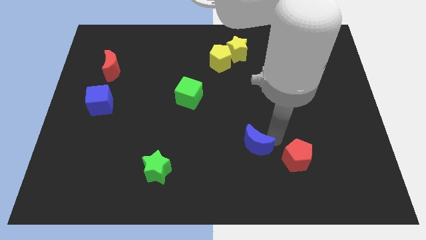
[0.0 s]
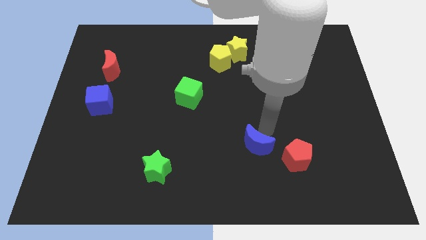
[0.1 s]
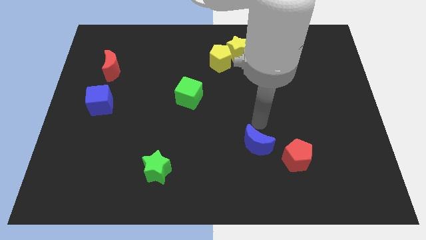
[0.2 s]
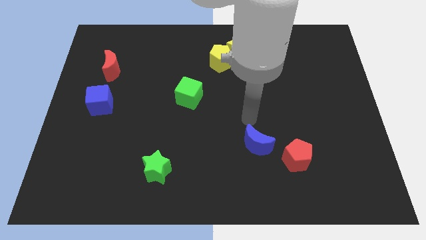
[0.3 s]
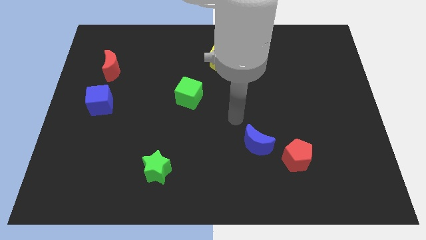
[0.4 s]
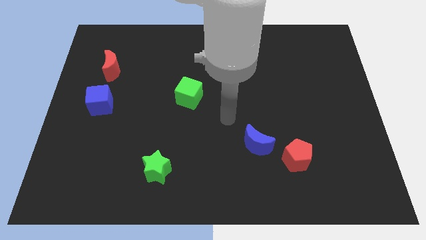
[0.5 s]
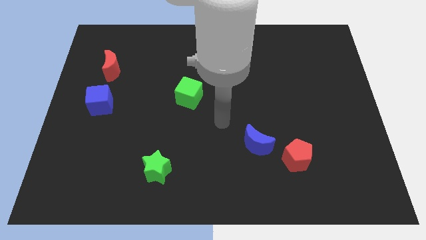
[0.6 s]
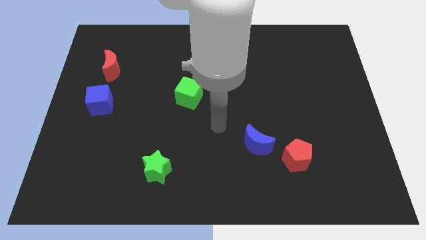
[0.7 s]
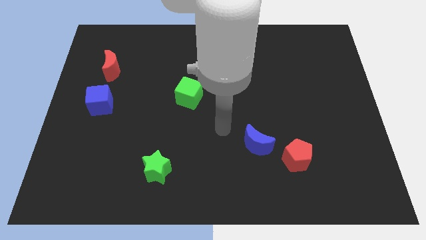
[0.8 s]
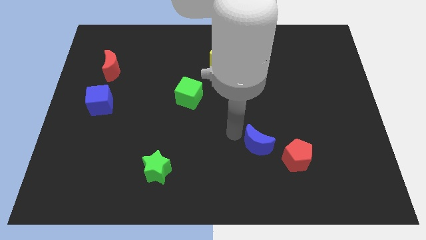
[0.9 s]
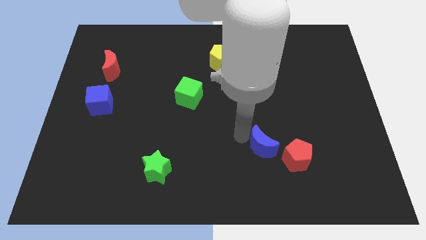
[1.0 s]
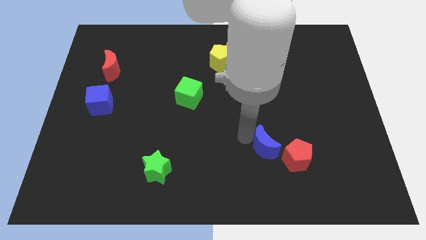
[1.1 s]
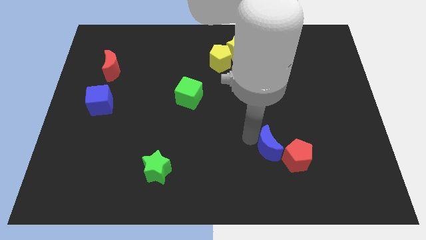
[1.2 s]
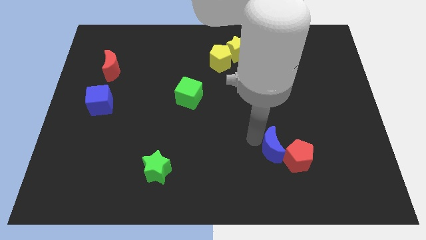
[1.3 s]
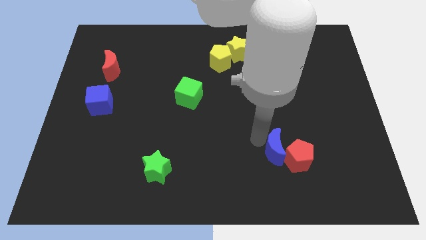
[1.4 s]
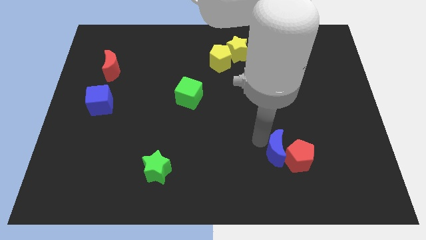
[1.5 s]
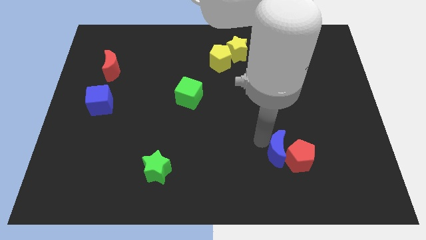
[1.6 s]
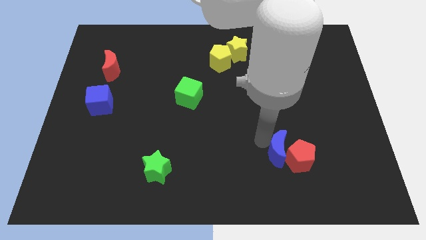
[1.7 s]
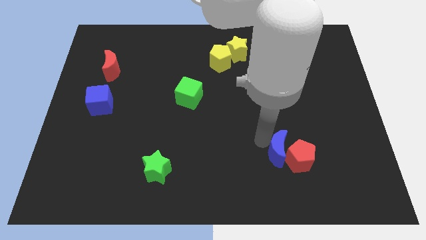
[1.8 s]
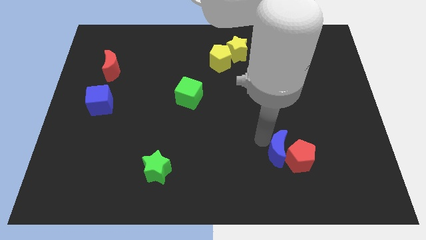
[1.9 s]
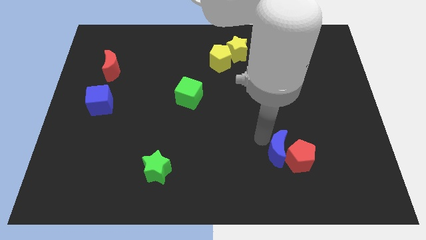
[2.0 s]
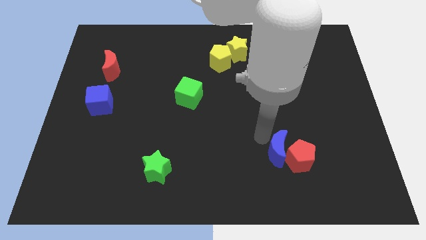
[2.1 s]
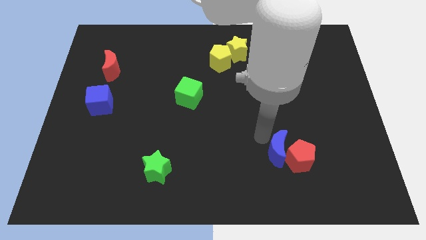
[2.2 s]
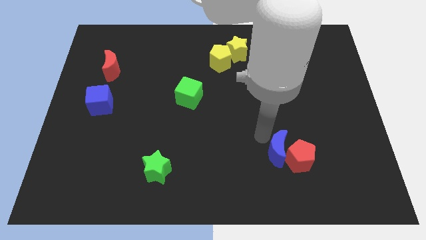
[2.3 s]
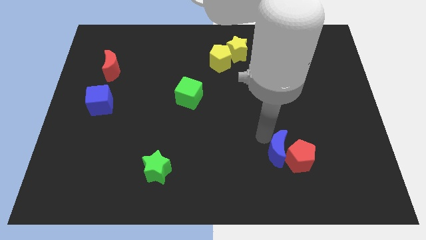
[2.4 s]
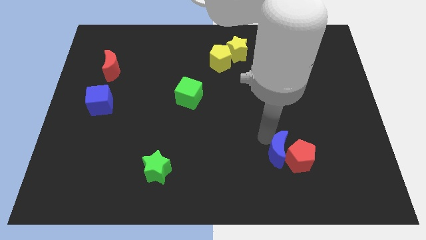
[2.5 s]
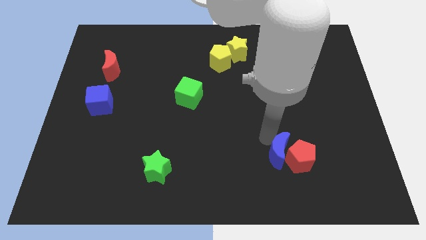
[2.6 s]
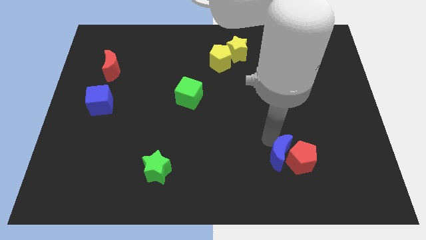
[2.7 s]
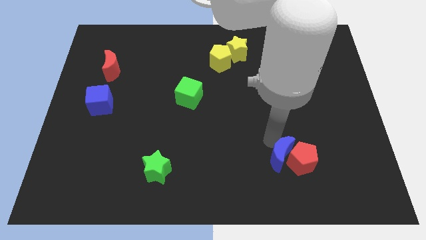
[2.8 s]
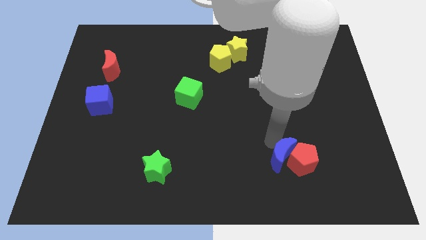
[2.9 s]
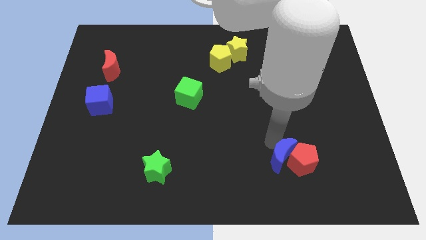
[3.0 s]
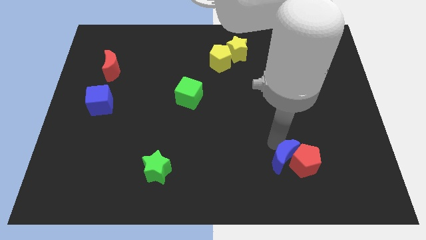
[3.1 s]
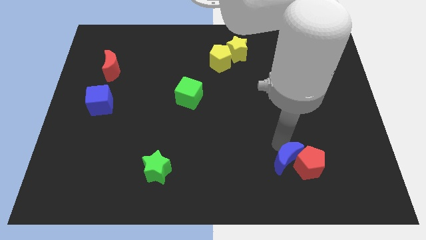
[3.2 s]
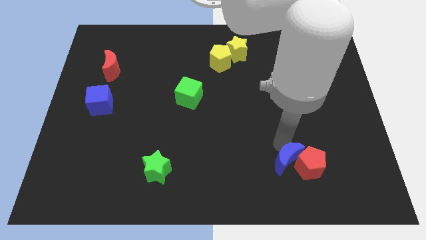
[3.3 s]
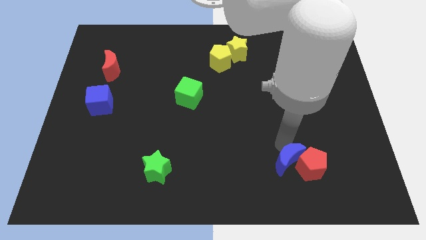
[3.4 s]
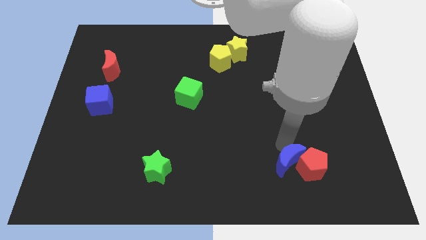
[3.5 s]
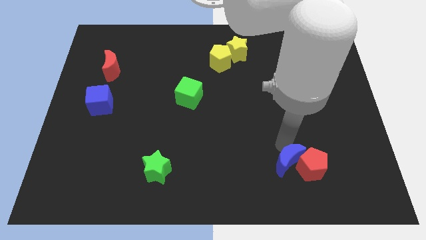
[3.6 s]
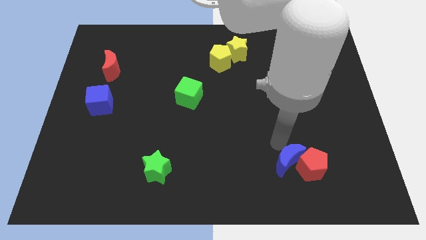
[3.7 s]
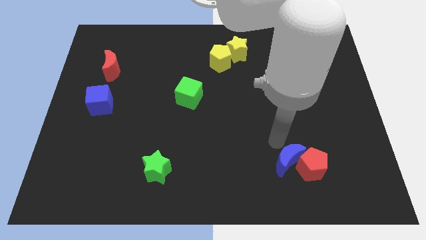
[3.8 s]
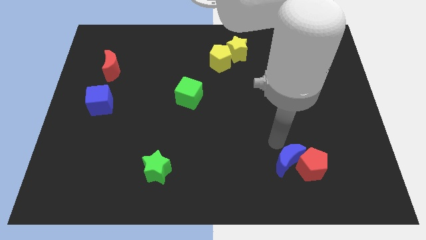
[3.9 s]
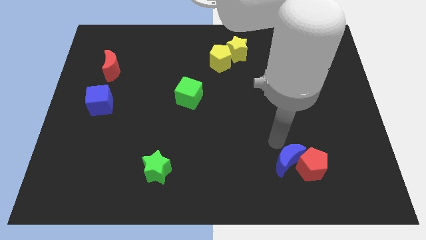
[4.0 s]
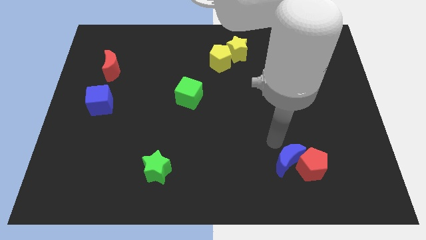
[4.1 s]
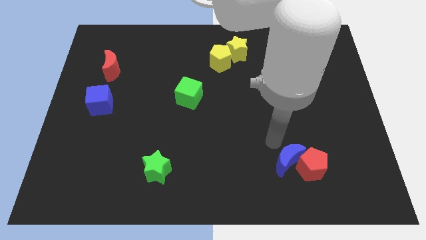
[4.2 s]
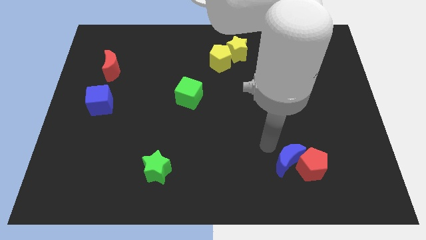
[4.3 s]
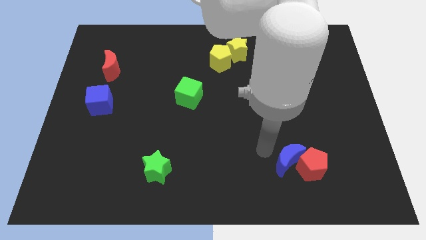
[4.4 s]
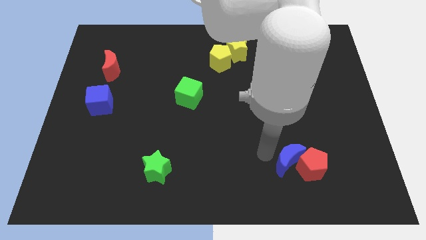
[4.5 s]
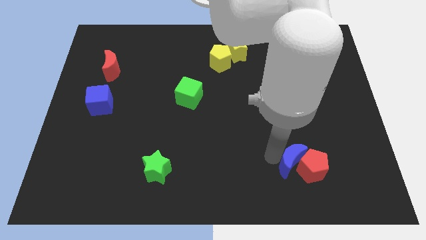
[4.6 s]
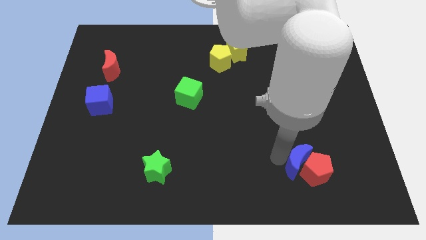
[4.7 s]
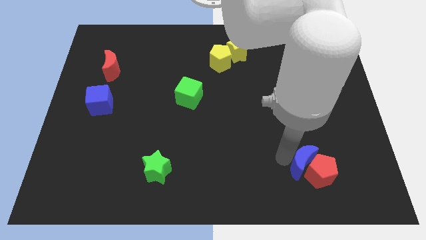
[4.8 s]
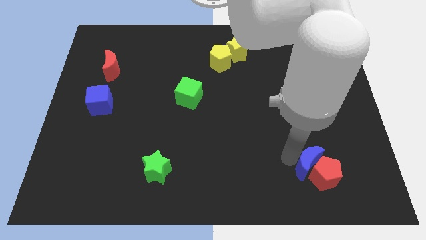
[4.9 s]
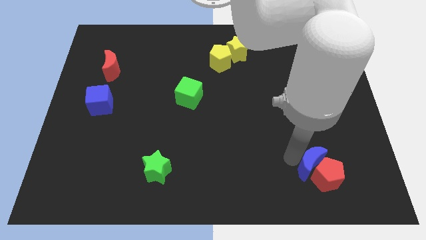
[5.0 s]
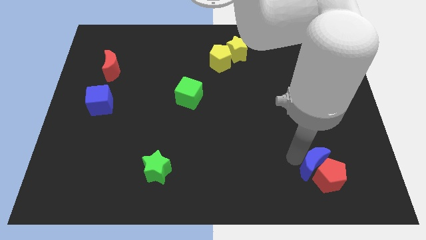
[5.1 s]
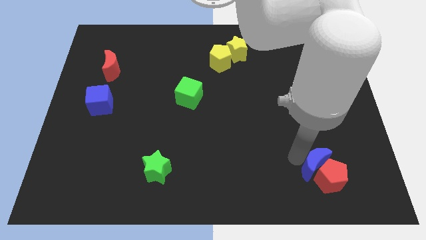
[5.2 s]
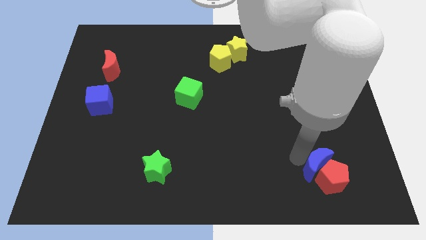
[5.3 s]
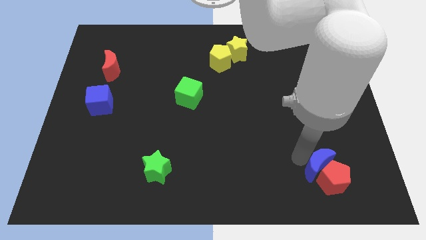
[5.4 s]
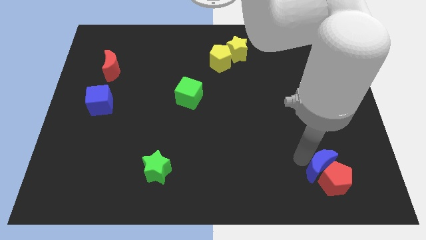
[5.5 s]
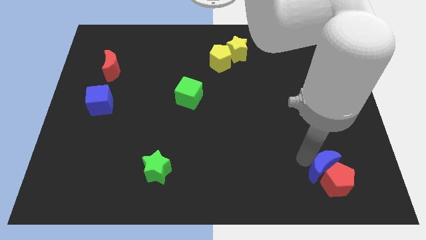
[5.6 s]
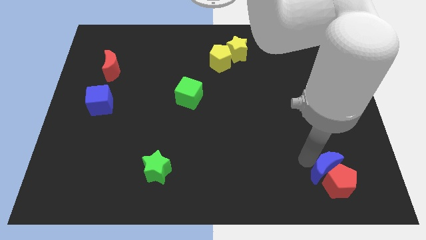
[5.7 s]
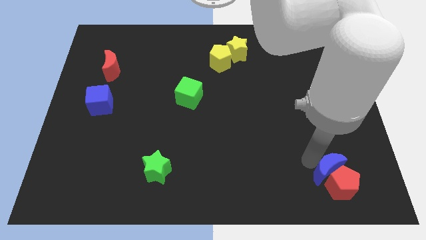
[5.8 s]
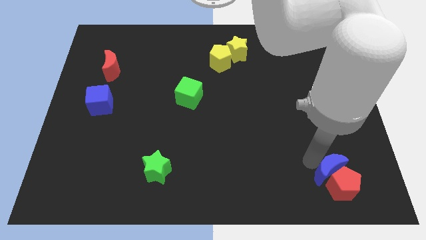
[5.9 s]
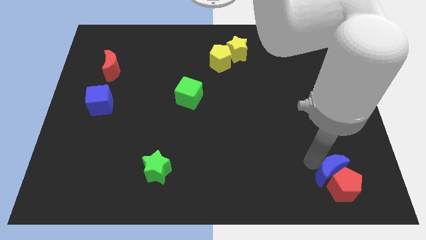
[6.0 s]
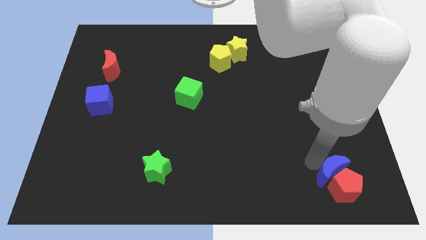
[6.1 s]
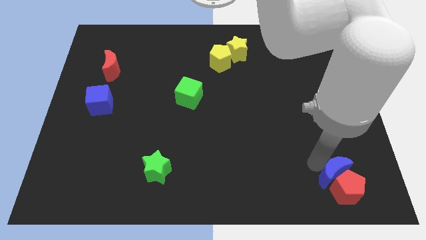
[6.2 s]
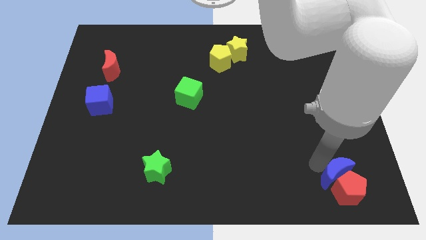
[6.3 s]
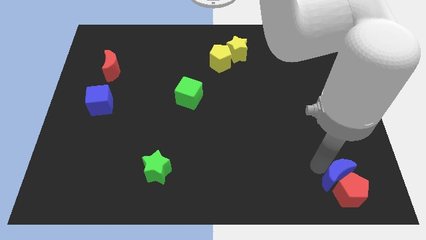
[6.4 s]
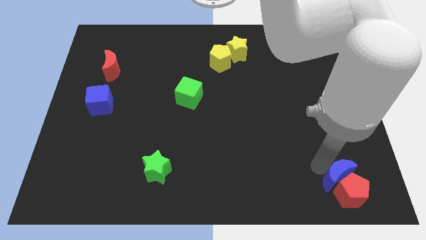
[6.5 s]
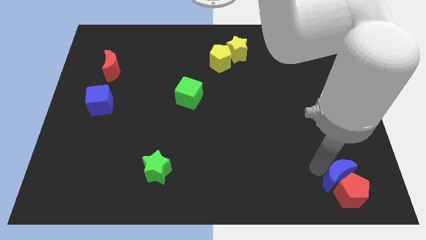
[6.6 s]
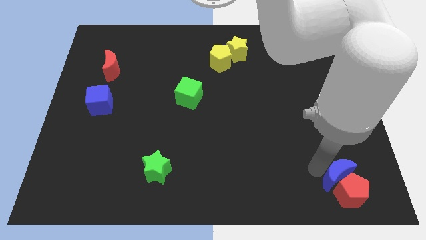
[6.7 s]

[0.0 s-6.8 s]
push the blue moon with the red pentagon to the bottom right corner of the board

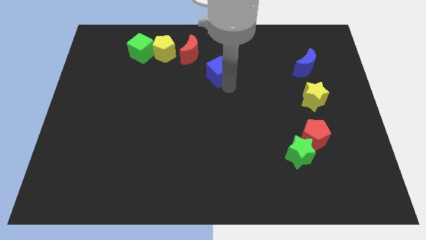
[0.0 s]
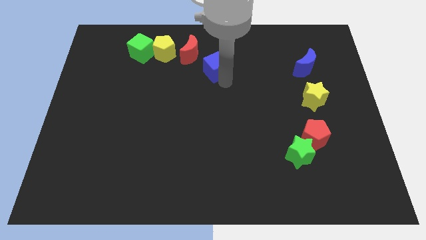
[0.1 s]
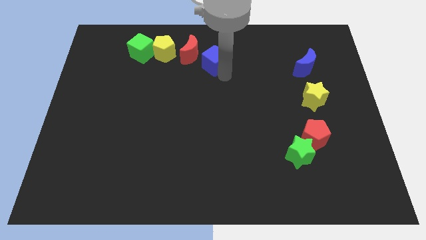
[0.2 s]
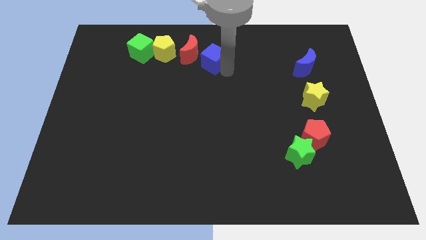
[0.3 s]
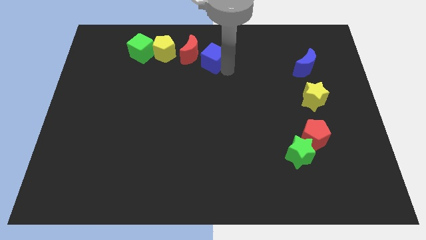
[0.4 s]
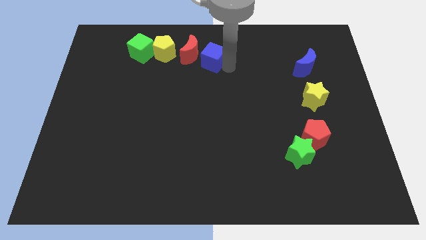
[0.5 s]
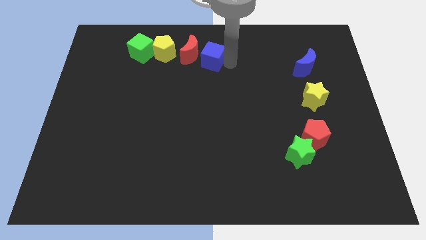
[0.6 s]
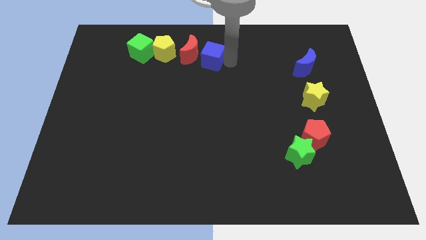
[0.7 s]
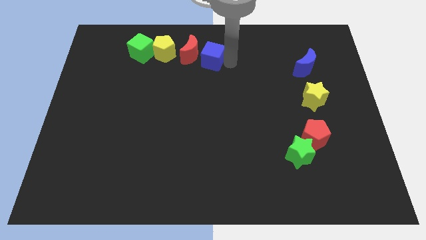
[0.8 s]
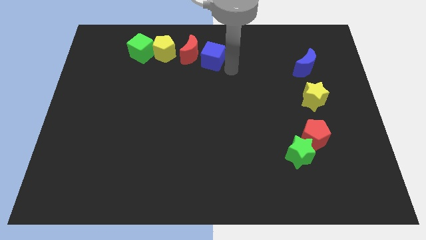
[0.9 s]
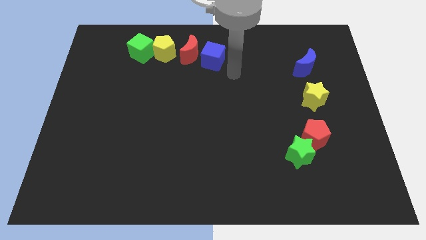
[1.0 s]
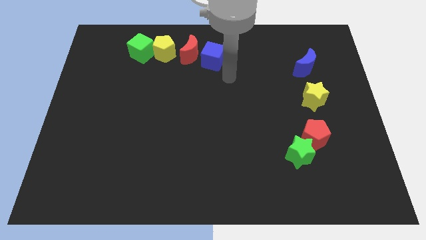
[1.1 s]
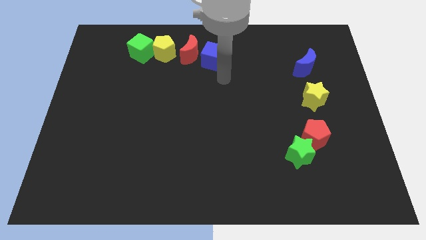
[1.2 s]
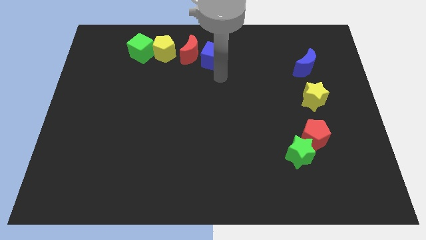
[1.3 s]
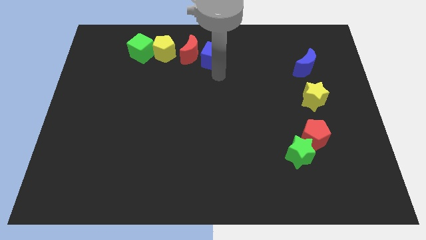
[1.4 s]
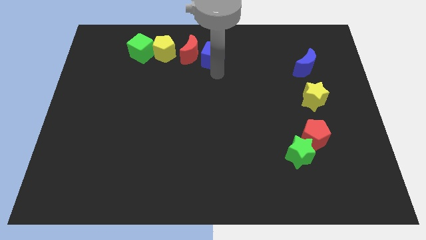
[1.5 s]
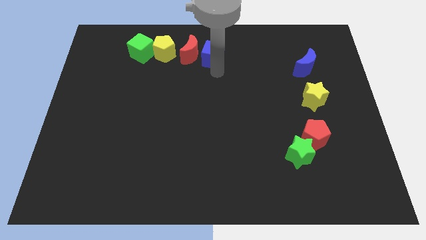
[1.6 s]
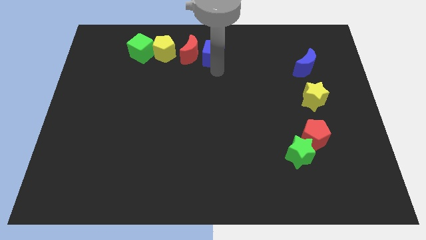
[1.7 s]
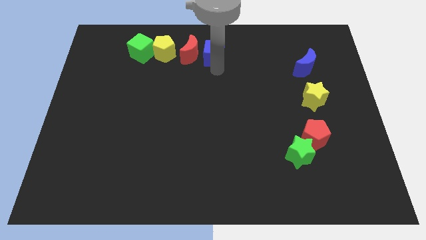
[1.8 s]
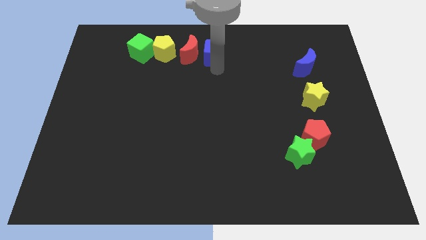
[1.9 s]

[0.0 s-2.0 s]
place blue cube right to red moon

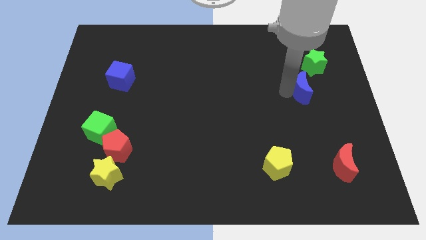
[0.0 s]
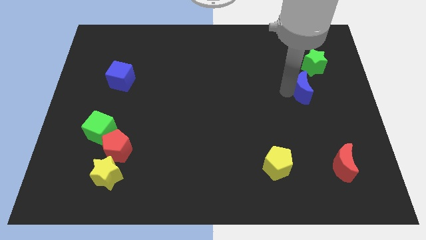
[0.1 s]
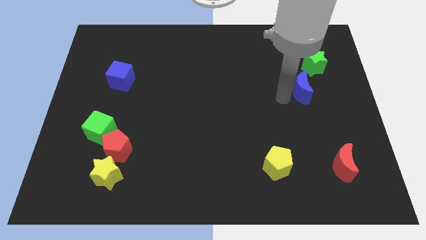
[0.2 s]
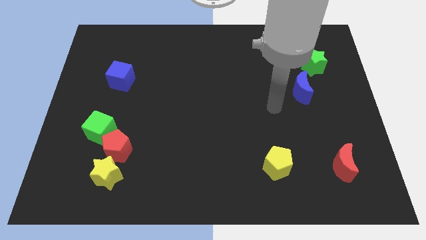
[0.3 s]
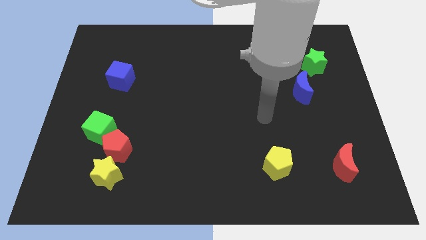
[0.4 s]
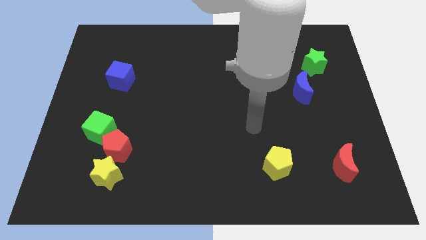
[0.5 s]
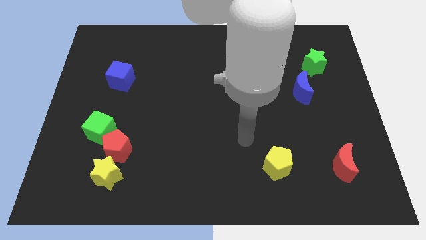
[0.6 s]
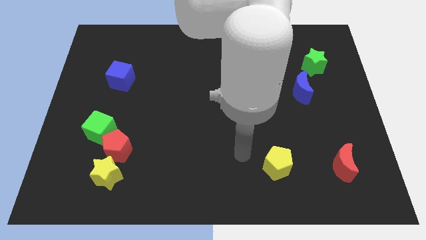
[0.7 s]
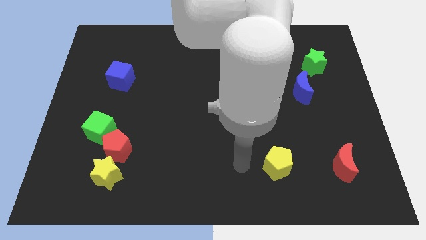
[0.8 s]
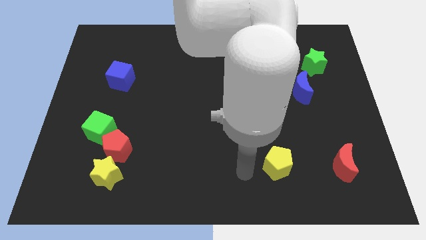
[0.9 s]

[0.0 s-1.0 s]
point your arm to the left side of yellow pentagon
